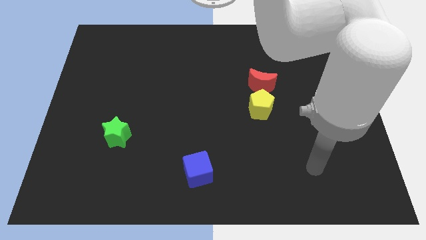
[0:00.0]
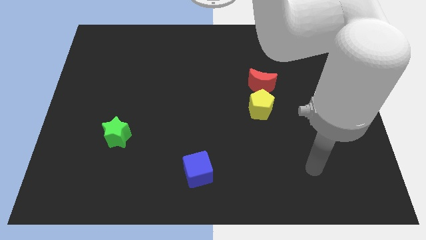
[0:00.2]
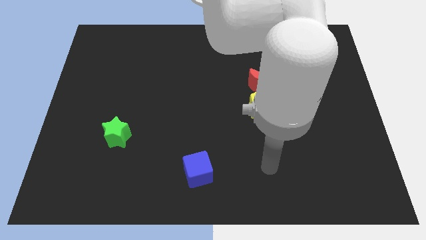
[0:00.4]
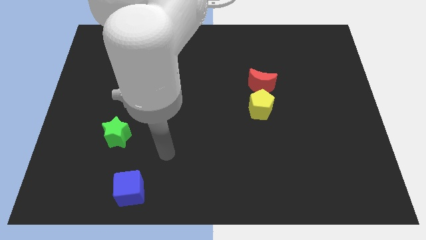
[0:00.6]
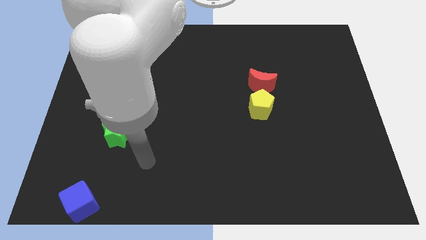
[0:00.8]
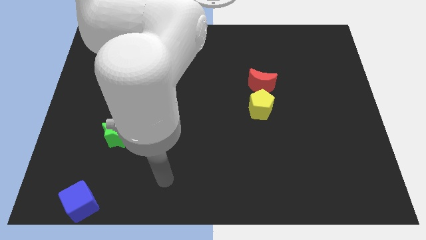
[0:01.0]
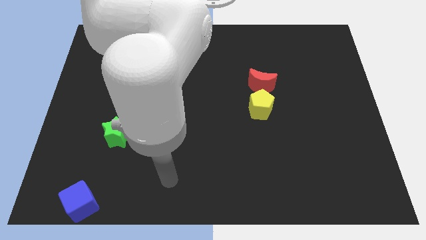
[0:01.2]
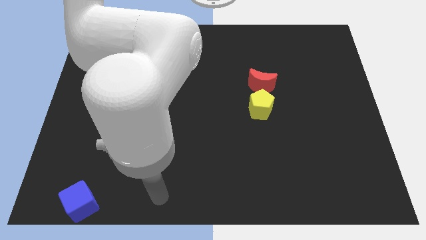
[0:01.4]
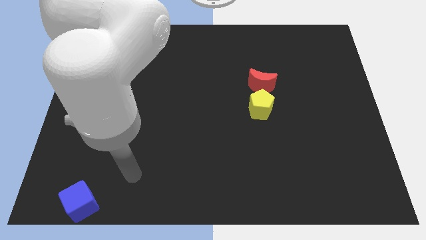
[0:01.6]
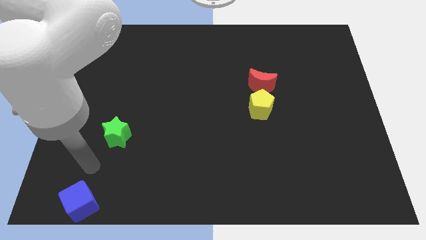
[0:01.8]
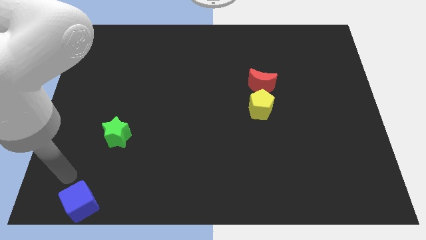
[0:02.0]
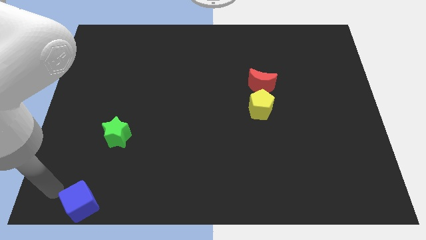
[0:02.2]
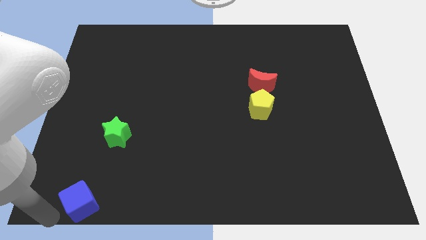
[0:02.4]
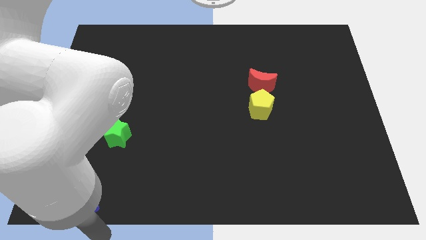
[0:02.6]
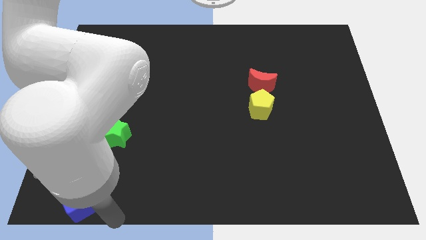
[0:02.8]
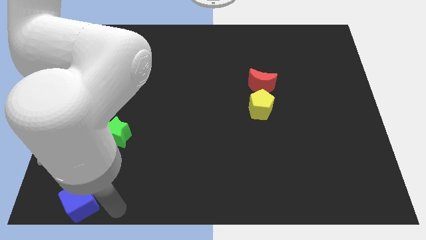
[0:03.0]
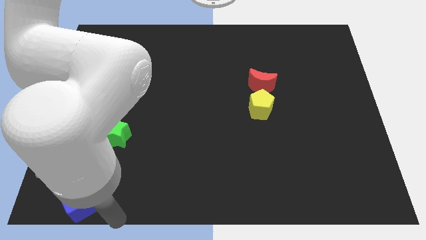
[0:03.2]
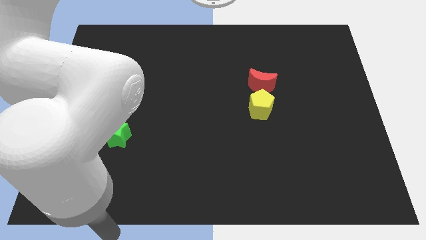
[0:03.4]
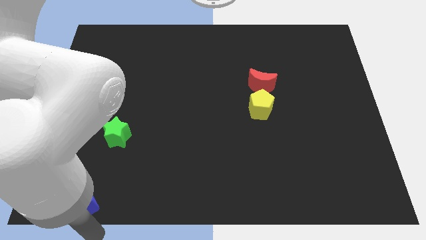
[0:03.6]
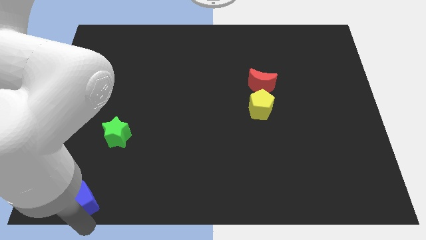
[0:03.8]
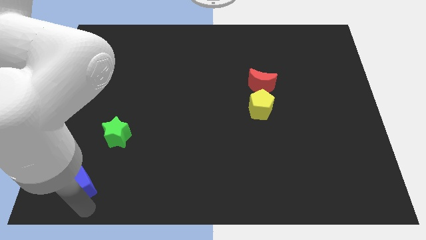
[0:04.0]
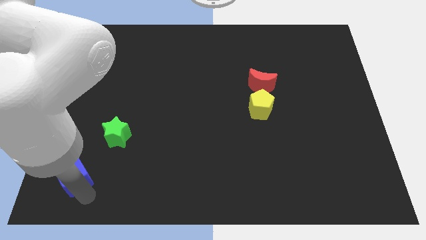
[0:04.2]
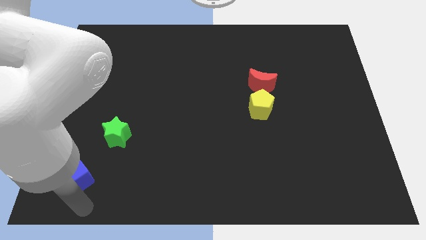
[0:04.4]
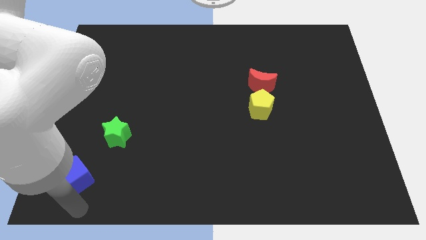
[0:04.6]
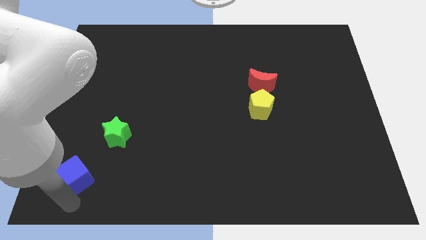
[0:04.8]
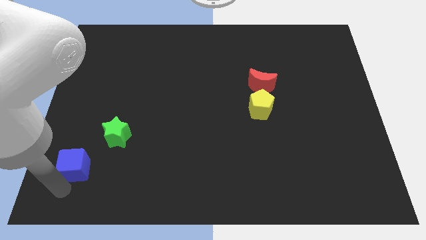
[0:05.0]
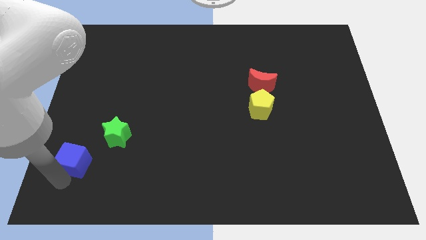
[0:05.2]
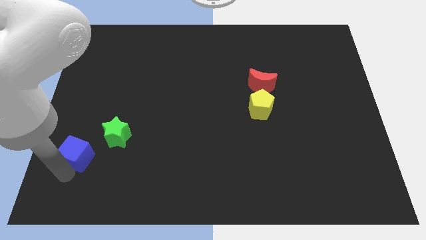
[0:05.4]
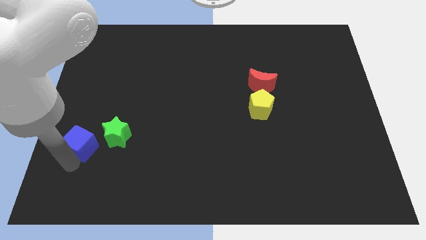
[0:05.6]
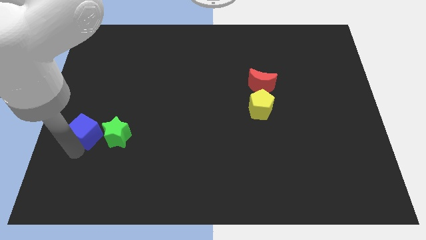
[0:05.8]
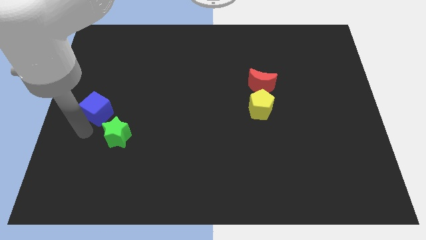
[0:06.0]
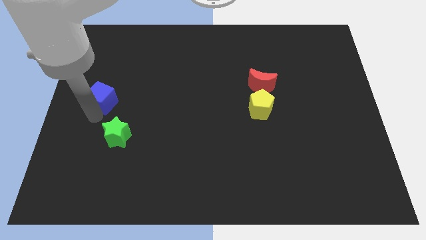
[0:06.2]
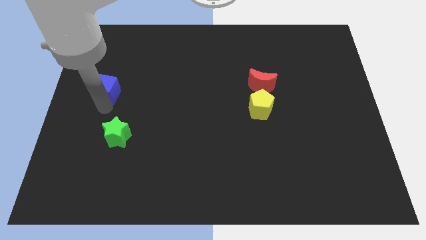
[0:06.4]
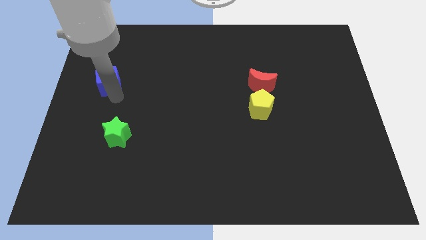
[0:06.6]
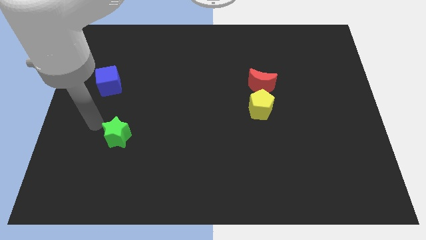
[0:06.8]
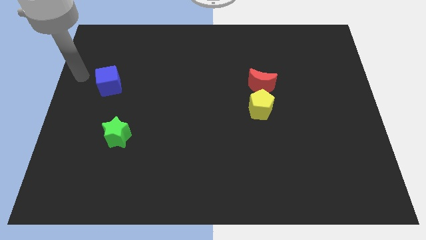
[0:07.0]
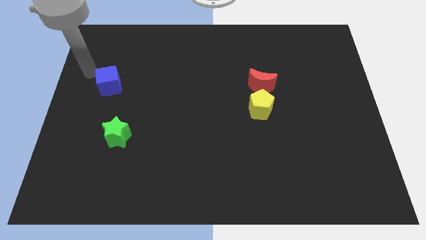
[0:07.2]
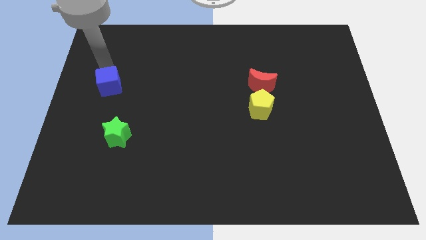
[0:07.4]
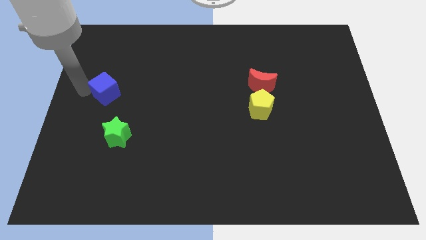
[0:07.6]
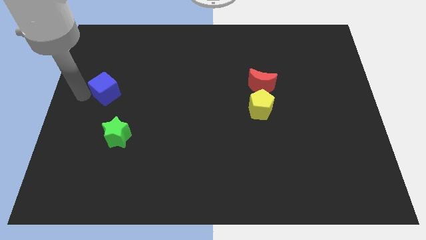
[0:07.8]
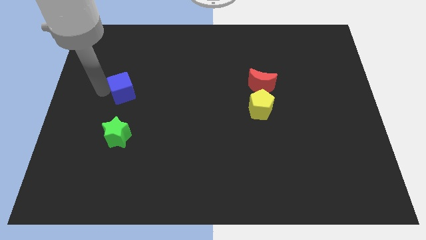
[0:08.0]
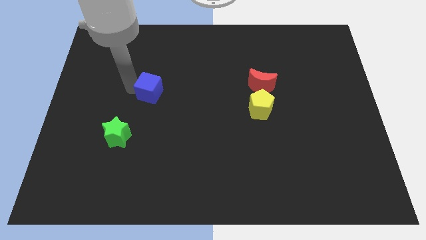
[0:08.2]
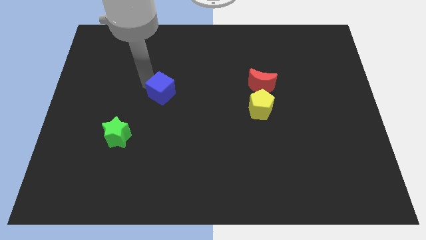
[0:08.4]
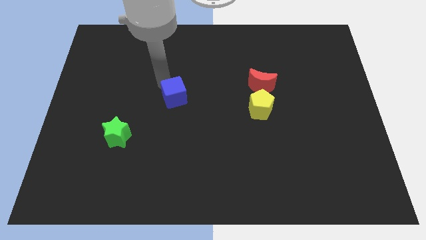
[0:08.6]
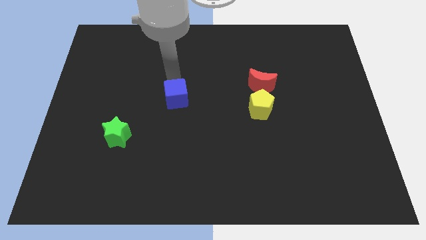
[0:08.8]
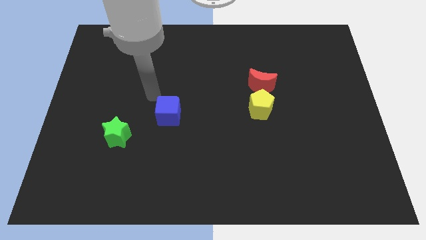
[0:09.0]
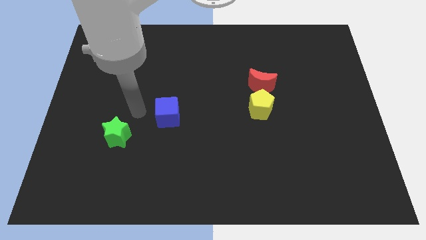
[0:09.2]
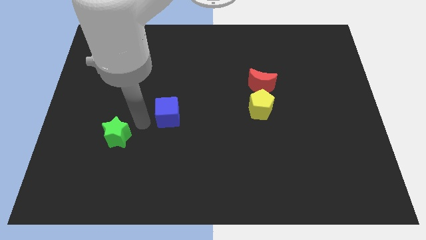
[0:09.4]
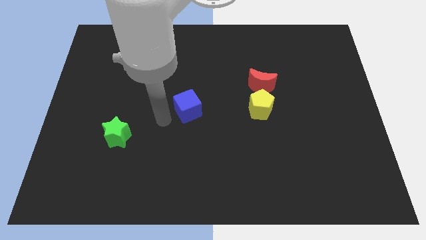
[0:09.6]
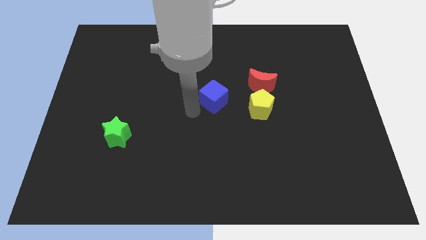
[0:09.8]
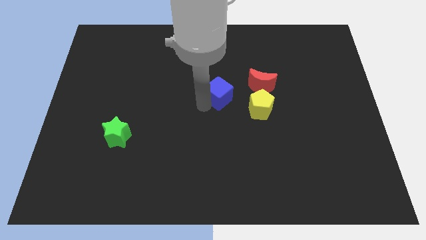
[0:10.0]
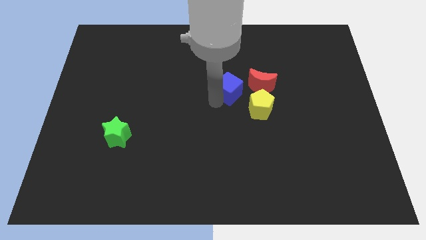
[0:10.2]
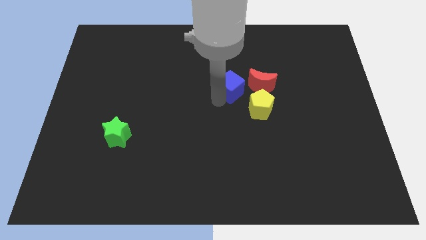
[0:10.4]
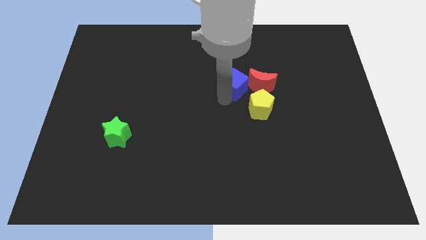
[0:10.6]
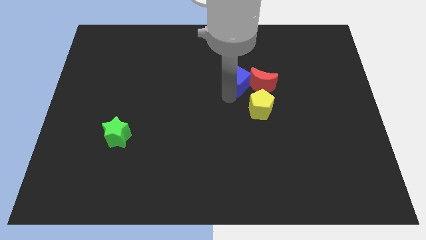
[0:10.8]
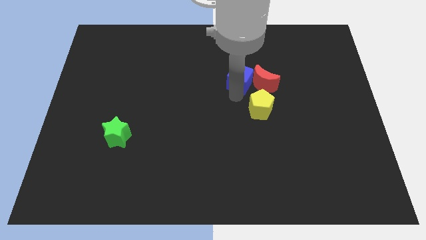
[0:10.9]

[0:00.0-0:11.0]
move the cube close to the red moon

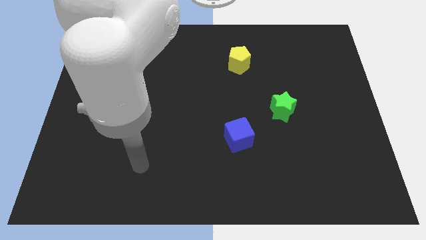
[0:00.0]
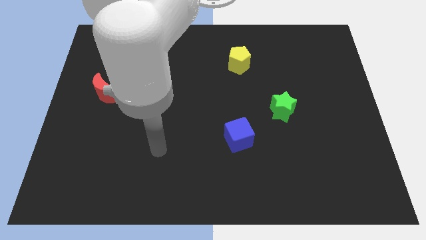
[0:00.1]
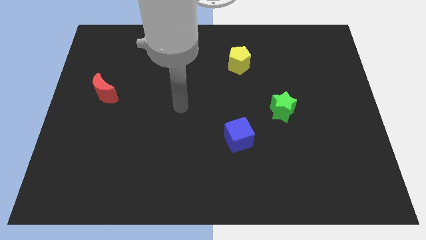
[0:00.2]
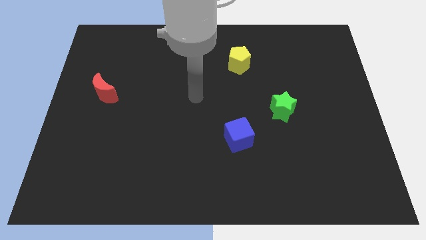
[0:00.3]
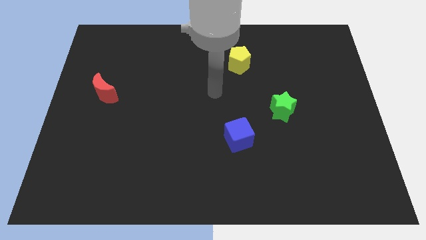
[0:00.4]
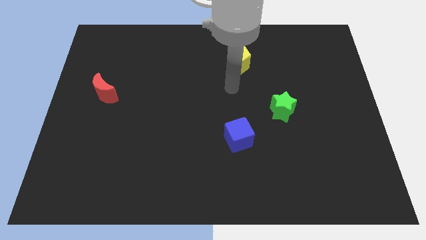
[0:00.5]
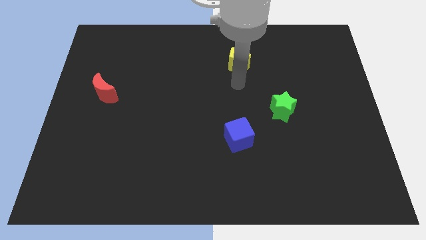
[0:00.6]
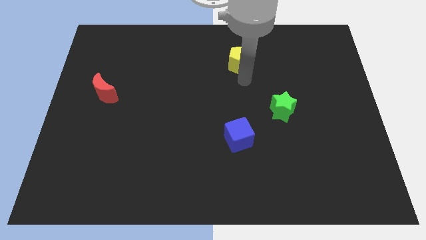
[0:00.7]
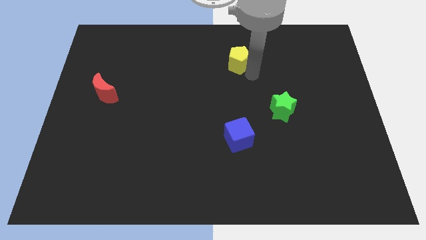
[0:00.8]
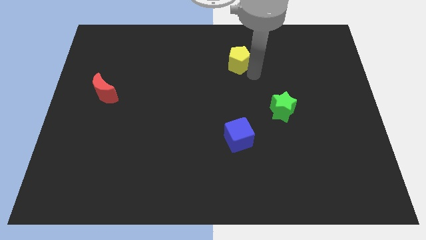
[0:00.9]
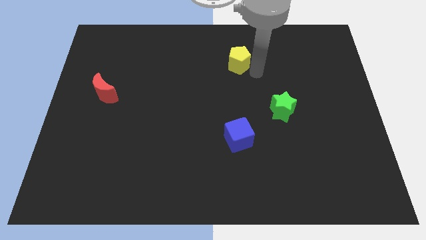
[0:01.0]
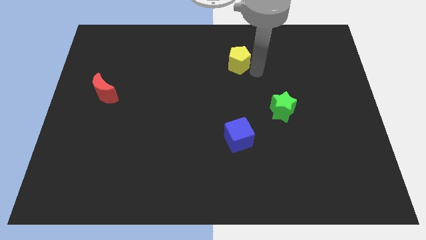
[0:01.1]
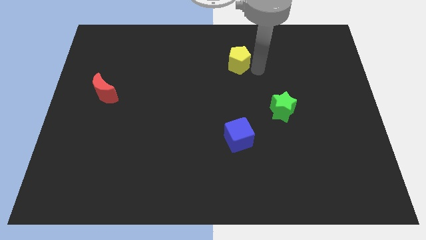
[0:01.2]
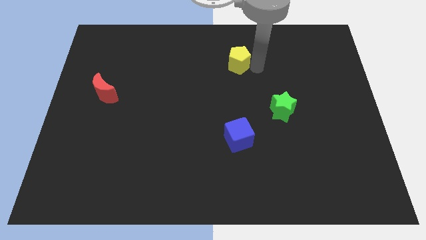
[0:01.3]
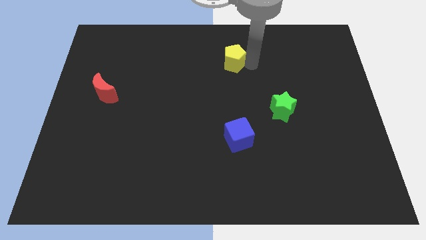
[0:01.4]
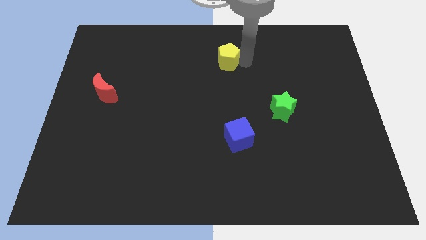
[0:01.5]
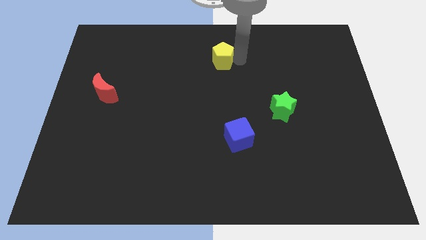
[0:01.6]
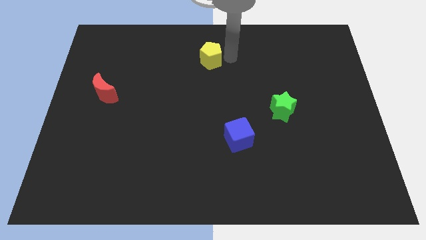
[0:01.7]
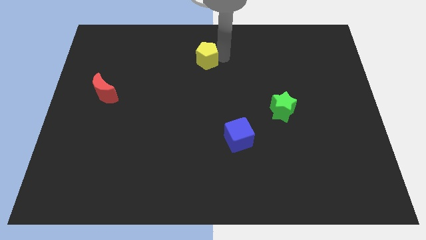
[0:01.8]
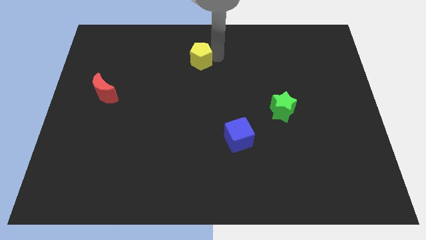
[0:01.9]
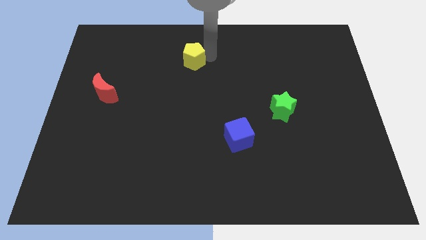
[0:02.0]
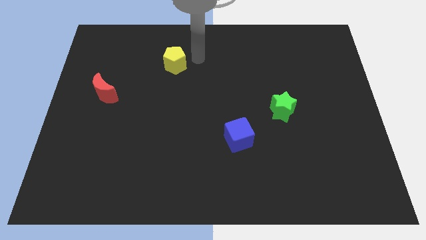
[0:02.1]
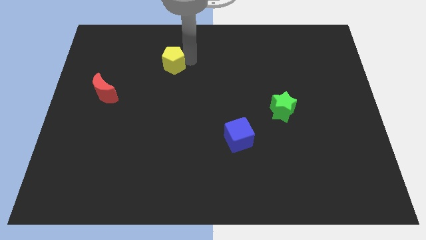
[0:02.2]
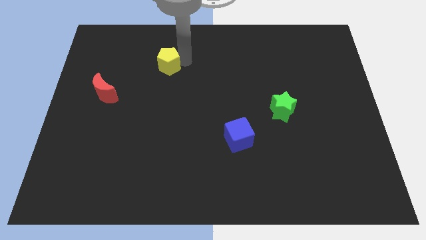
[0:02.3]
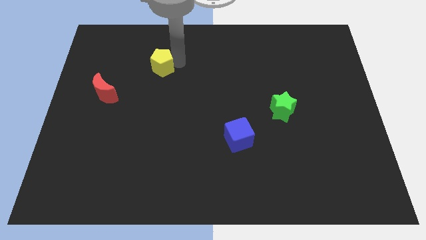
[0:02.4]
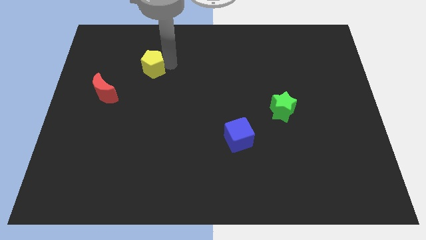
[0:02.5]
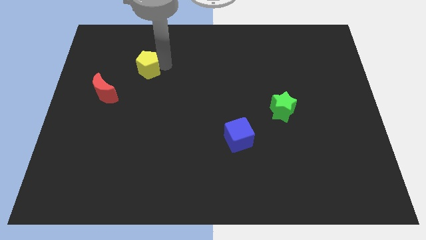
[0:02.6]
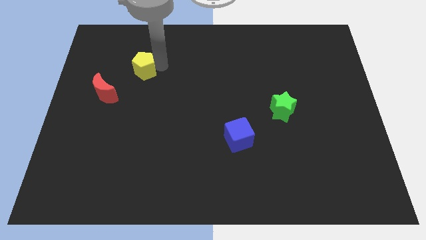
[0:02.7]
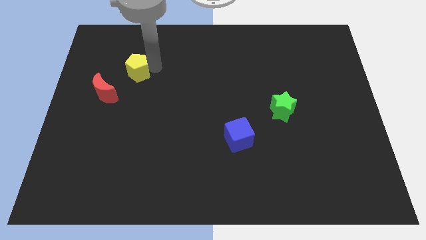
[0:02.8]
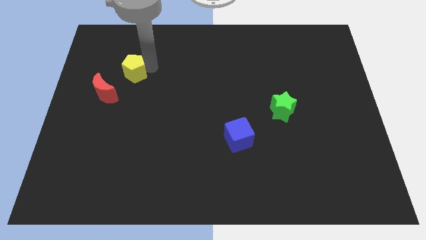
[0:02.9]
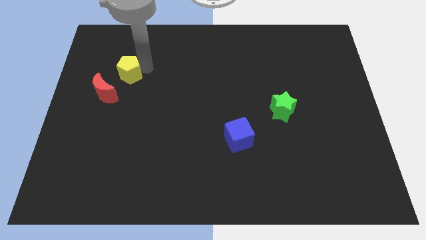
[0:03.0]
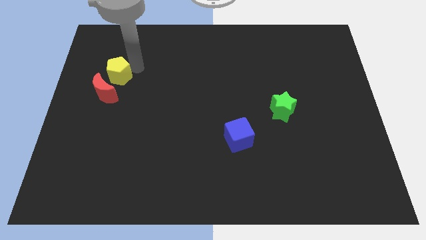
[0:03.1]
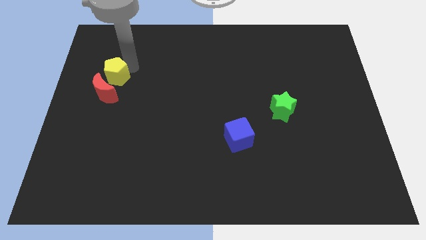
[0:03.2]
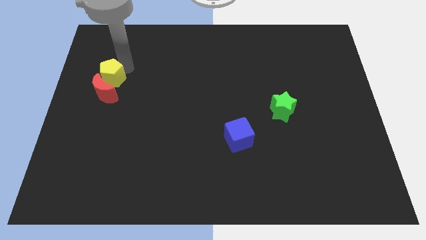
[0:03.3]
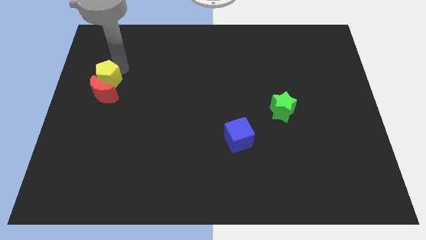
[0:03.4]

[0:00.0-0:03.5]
put the yellow block towards the red moon
